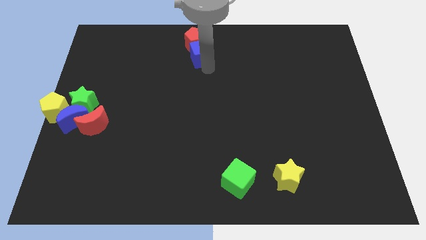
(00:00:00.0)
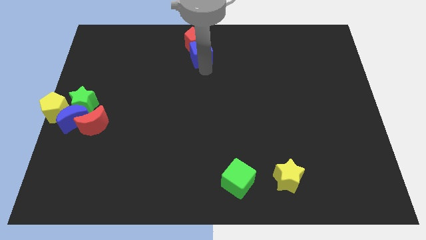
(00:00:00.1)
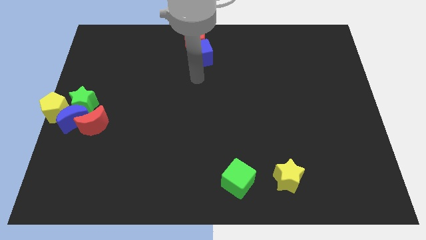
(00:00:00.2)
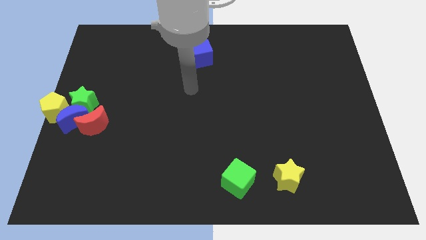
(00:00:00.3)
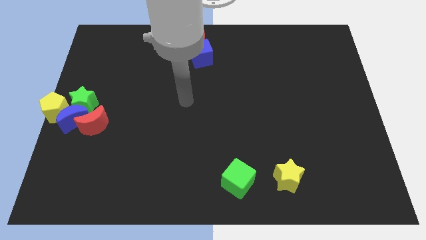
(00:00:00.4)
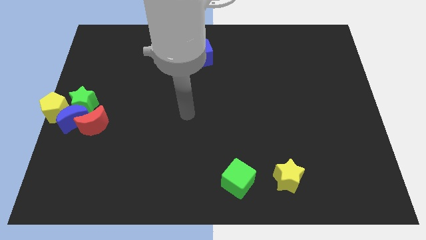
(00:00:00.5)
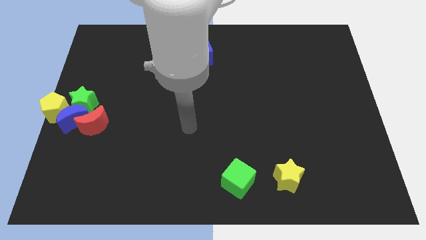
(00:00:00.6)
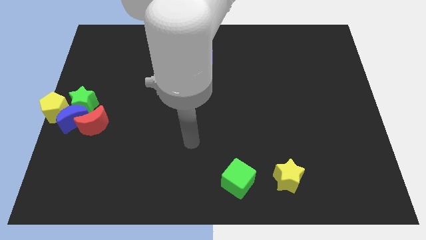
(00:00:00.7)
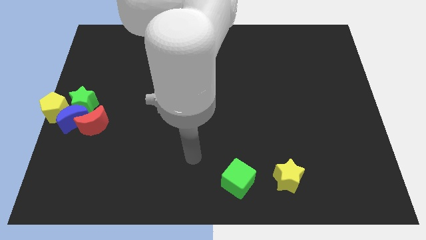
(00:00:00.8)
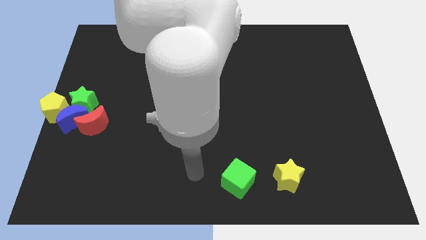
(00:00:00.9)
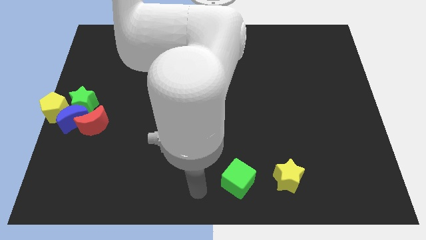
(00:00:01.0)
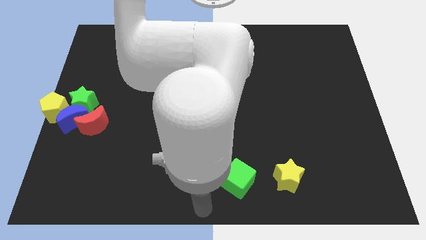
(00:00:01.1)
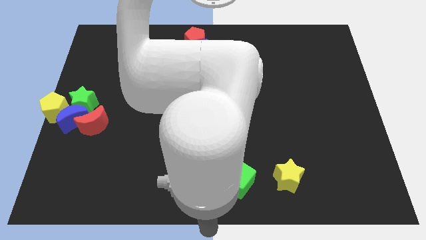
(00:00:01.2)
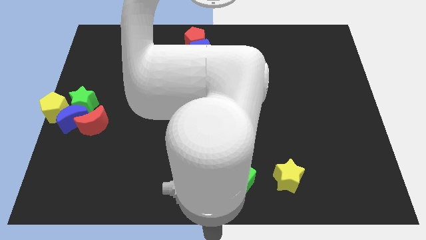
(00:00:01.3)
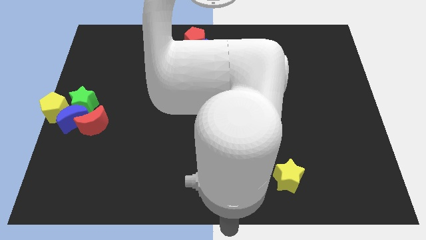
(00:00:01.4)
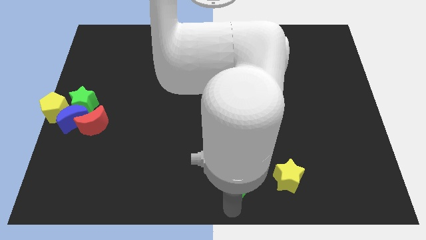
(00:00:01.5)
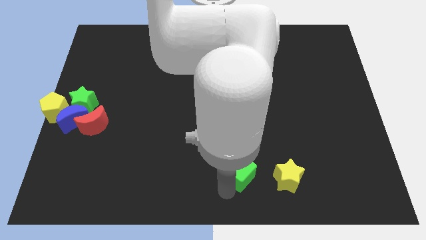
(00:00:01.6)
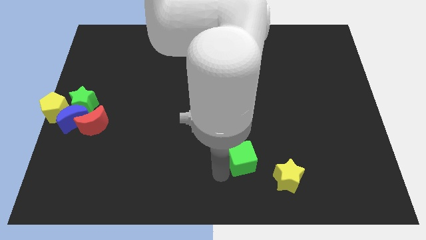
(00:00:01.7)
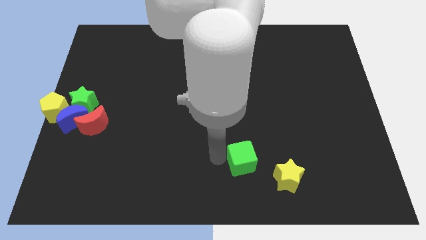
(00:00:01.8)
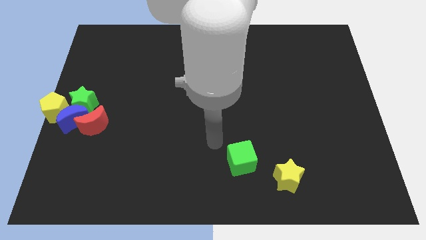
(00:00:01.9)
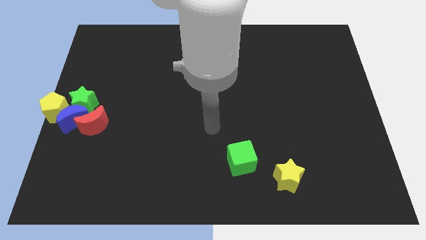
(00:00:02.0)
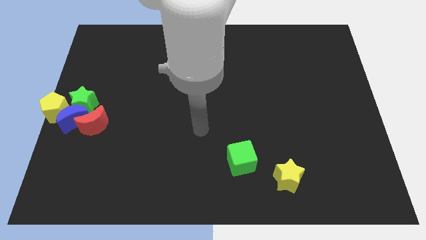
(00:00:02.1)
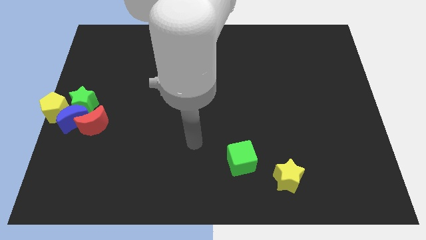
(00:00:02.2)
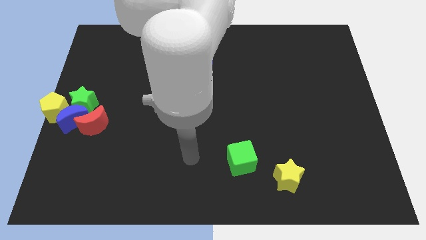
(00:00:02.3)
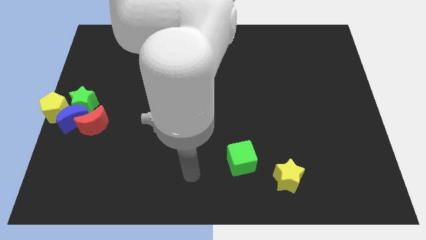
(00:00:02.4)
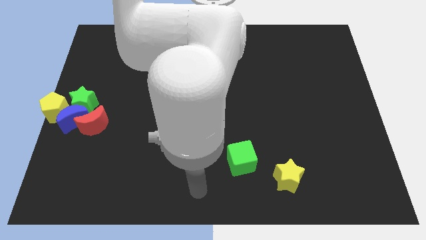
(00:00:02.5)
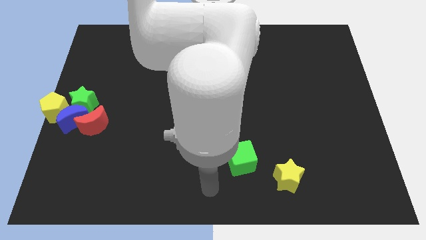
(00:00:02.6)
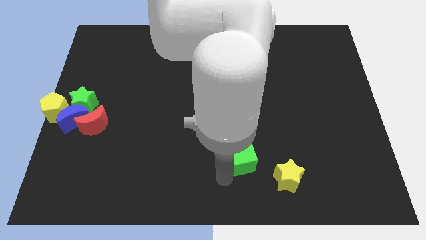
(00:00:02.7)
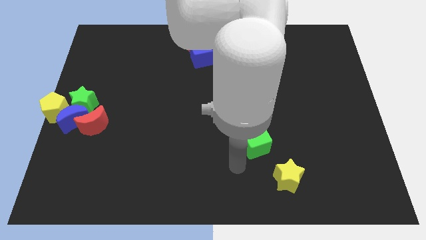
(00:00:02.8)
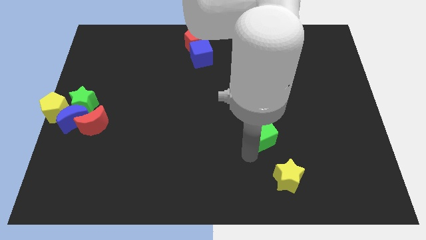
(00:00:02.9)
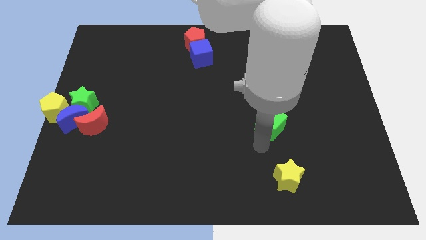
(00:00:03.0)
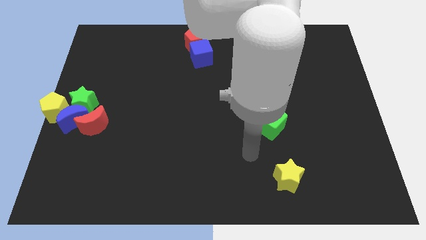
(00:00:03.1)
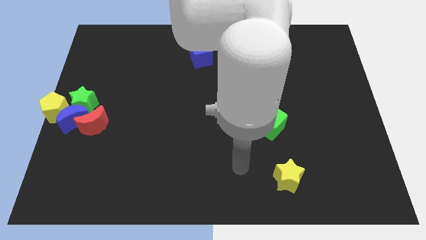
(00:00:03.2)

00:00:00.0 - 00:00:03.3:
slide green cube above the yellow star

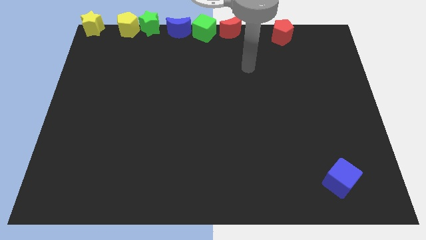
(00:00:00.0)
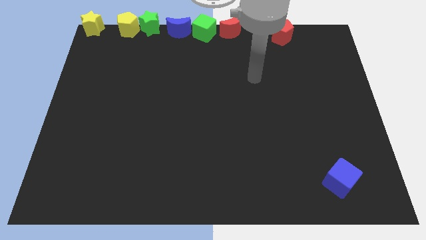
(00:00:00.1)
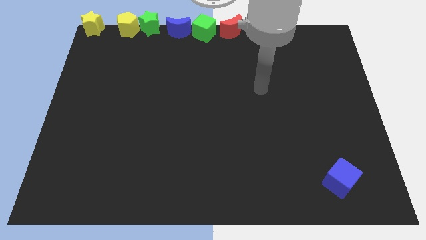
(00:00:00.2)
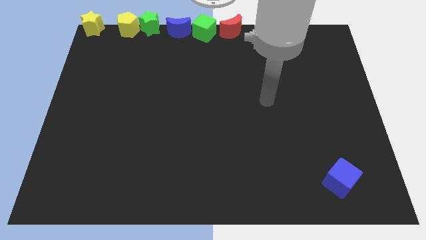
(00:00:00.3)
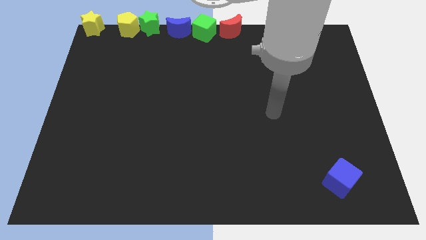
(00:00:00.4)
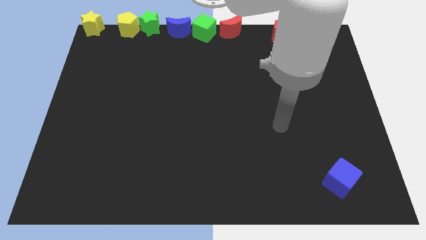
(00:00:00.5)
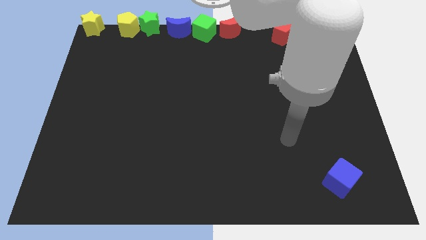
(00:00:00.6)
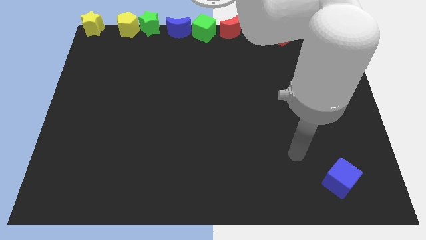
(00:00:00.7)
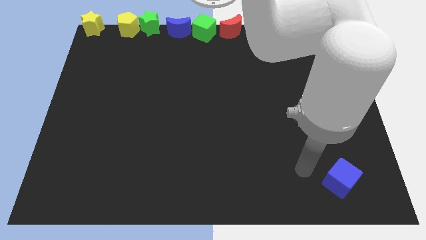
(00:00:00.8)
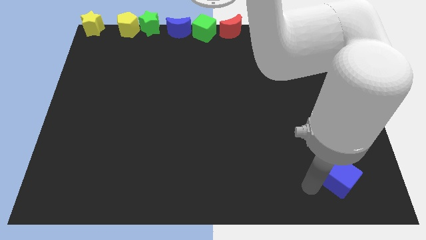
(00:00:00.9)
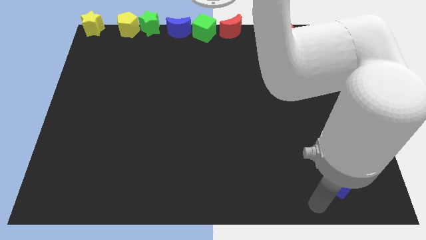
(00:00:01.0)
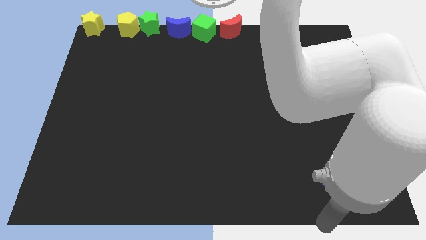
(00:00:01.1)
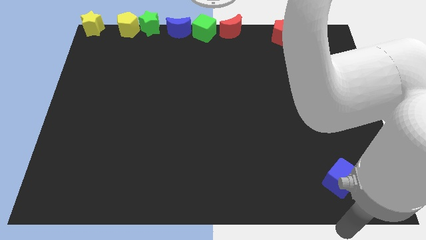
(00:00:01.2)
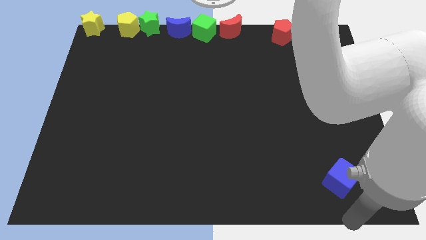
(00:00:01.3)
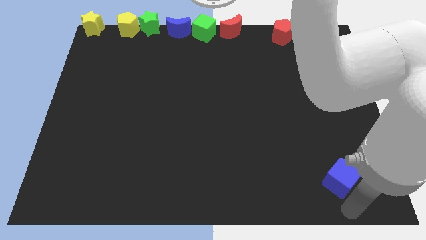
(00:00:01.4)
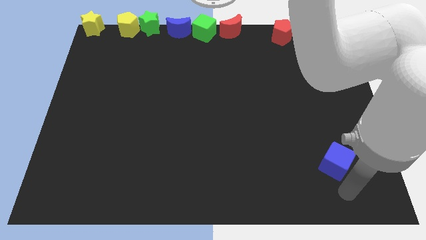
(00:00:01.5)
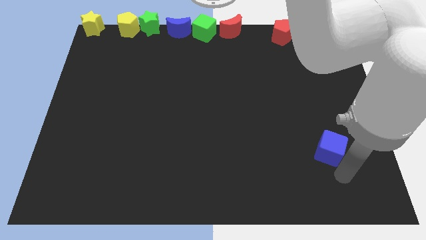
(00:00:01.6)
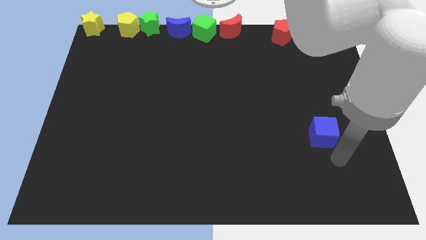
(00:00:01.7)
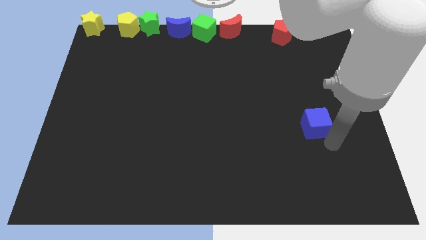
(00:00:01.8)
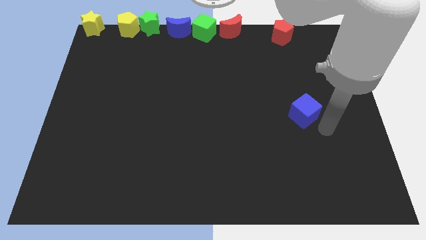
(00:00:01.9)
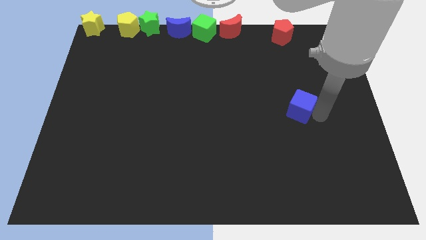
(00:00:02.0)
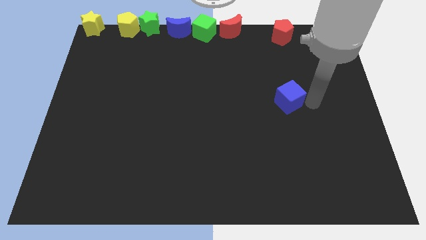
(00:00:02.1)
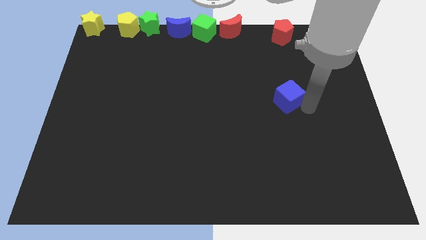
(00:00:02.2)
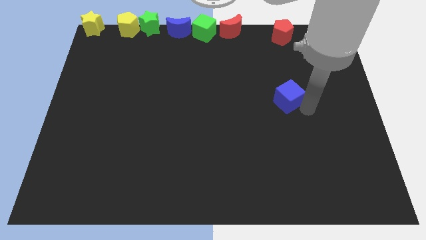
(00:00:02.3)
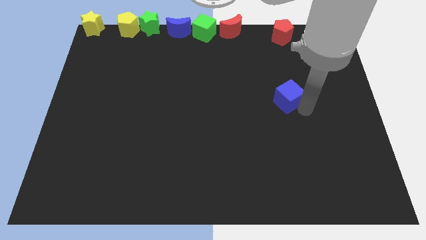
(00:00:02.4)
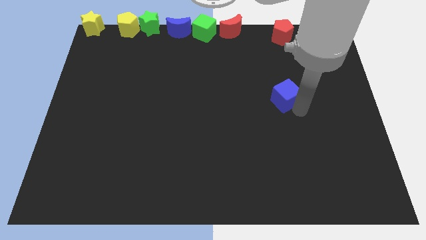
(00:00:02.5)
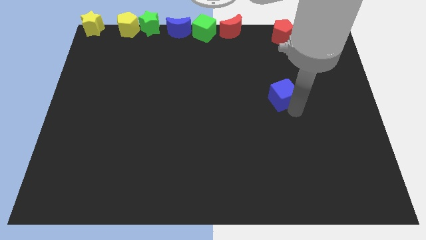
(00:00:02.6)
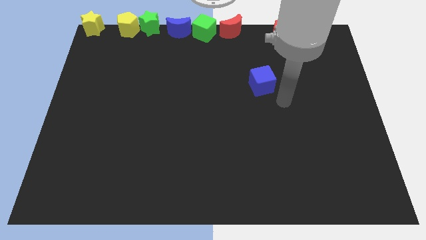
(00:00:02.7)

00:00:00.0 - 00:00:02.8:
push the blue cube towards the top center right of the board

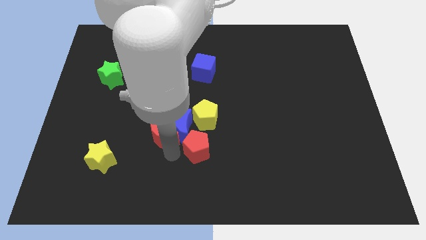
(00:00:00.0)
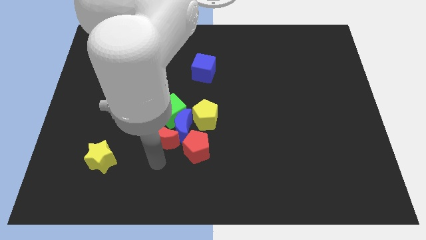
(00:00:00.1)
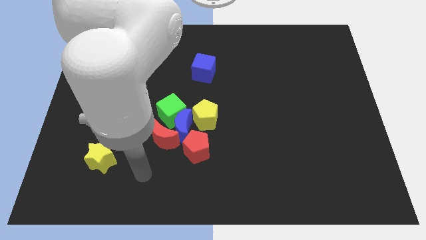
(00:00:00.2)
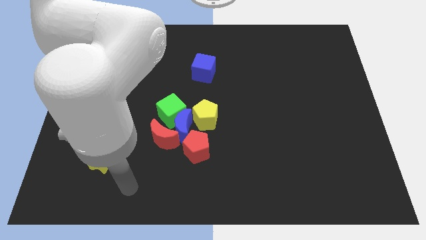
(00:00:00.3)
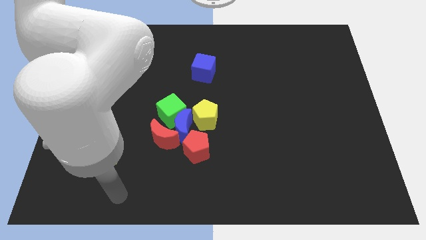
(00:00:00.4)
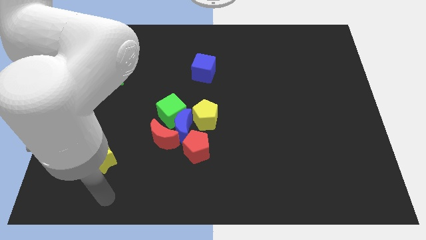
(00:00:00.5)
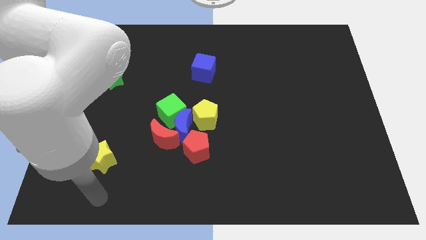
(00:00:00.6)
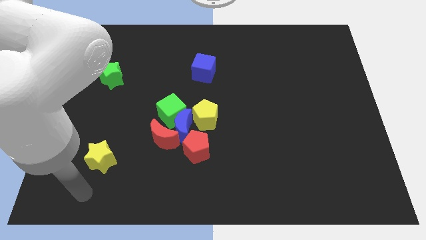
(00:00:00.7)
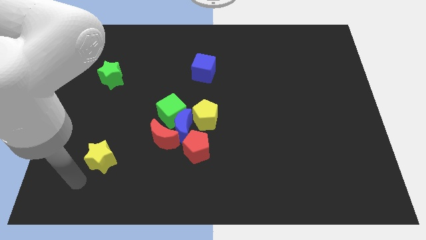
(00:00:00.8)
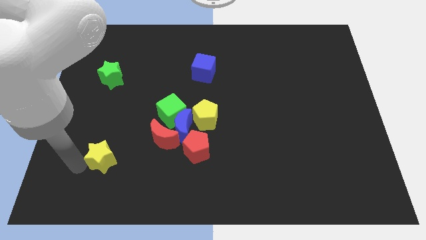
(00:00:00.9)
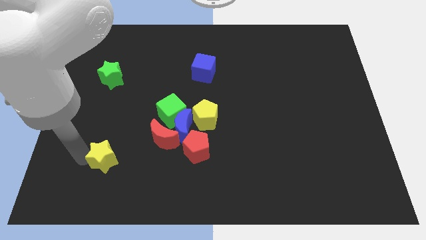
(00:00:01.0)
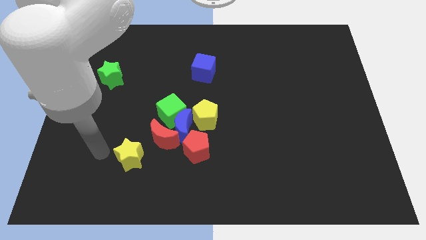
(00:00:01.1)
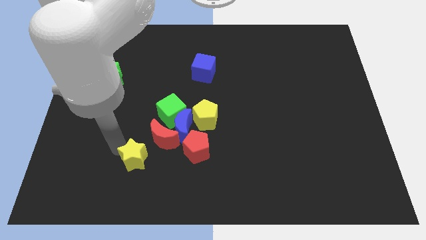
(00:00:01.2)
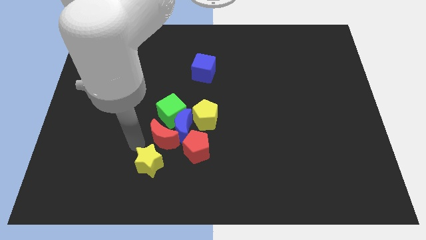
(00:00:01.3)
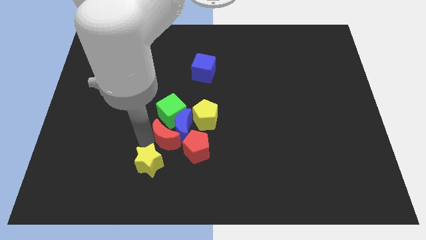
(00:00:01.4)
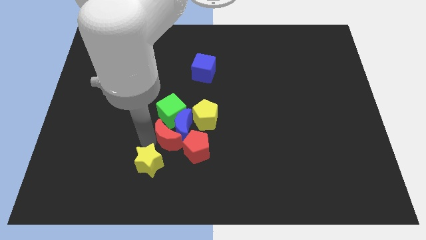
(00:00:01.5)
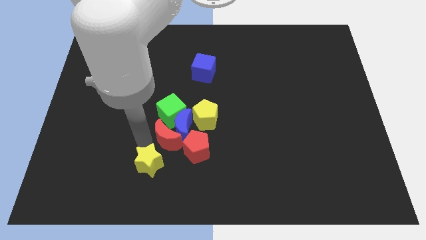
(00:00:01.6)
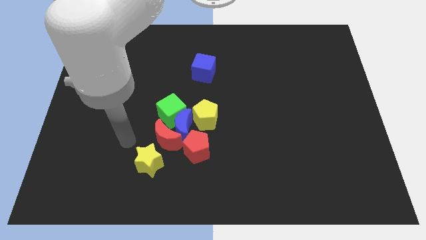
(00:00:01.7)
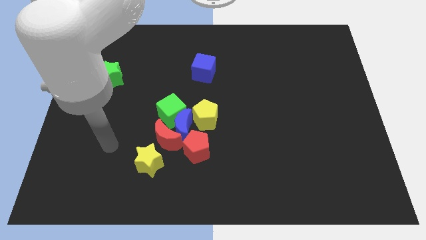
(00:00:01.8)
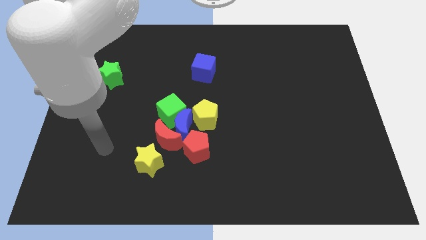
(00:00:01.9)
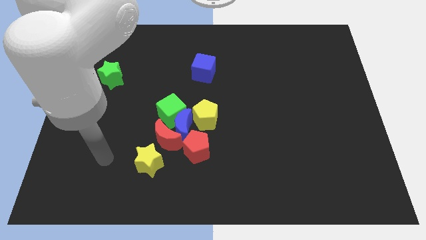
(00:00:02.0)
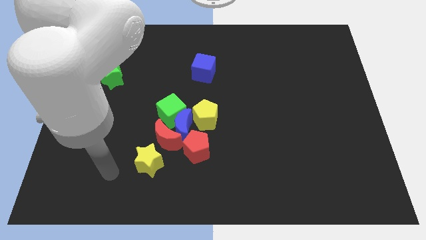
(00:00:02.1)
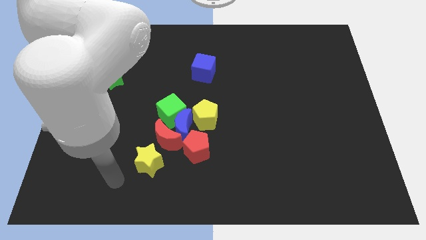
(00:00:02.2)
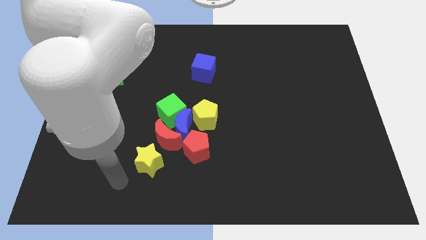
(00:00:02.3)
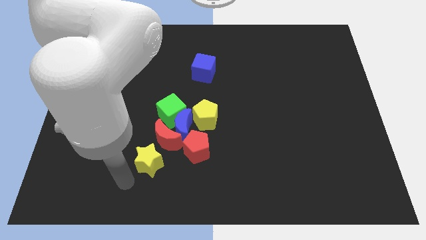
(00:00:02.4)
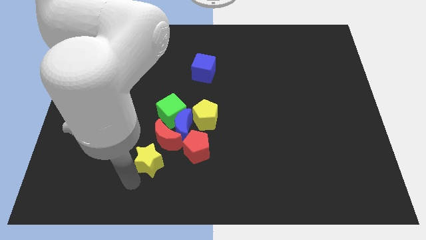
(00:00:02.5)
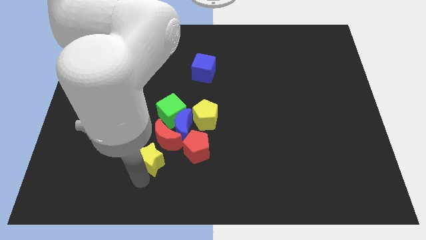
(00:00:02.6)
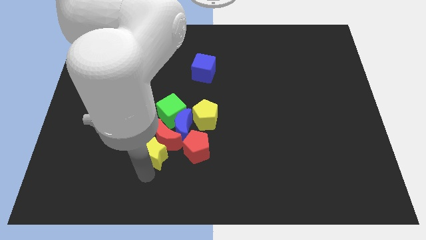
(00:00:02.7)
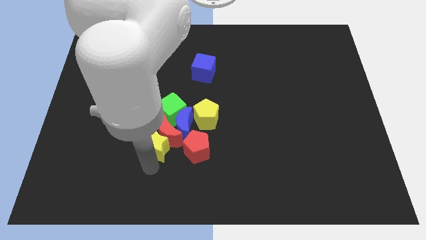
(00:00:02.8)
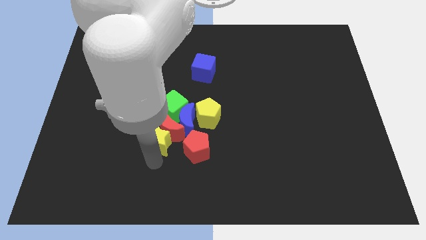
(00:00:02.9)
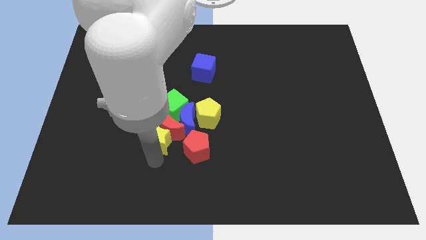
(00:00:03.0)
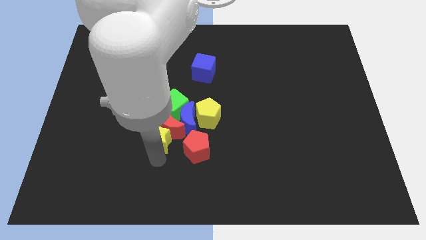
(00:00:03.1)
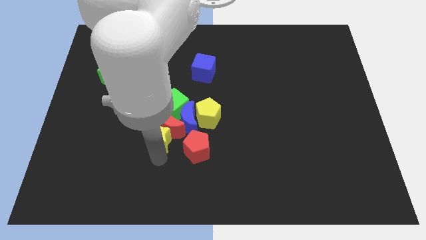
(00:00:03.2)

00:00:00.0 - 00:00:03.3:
push the yellow star into the red moon
